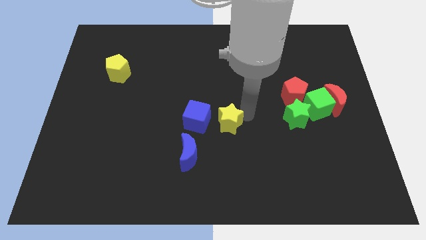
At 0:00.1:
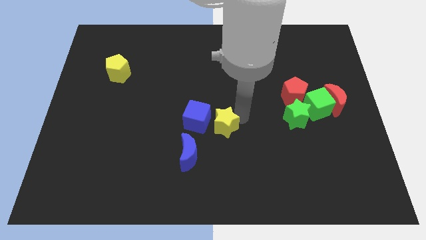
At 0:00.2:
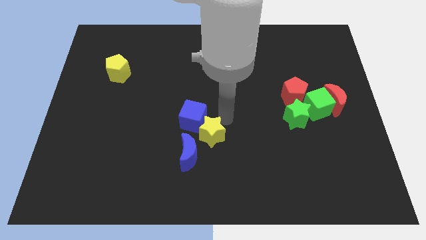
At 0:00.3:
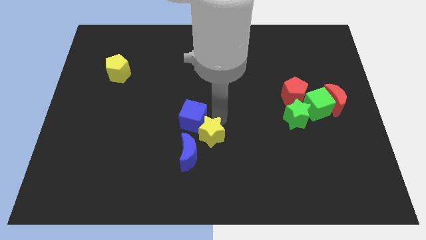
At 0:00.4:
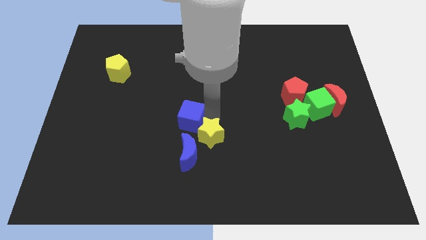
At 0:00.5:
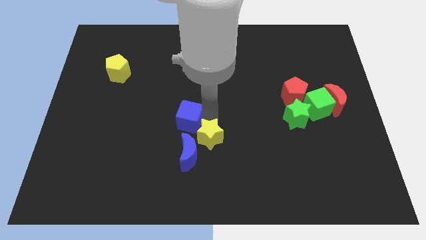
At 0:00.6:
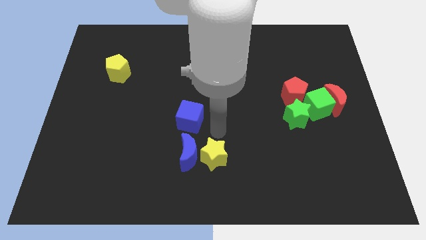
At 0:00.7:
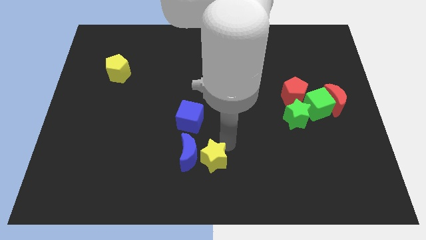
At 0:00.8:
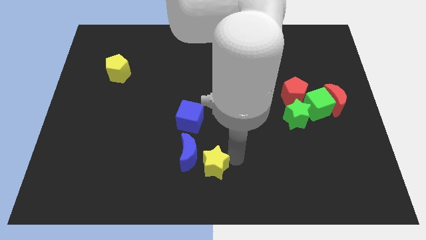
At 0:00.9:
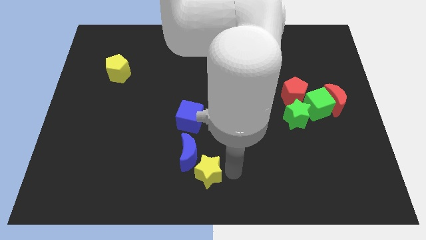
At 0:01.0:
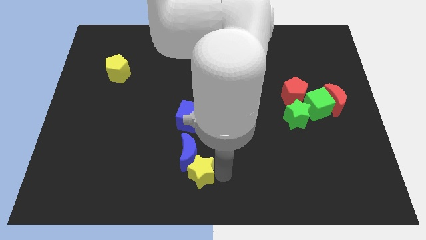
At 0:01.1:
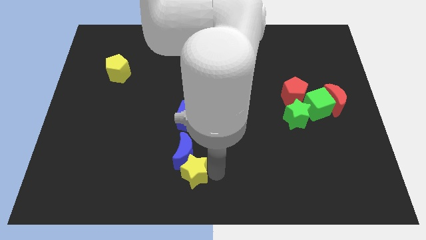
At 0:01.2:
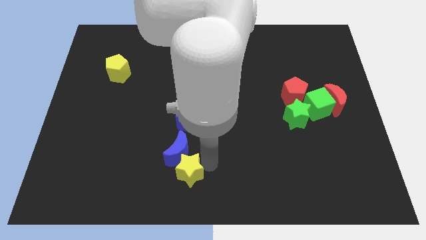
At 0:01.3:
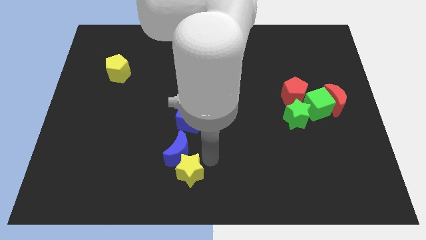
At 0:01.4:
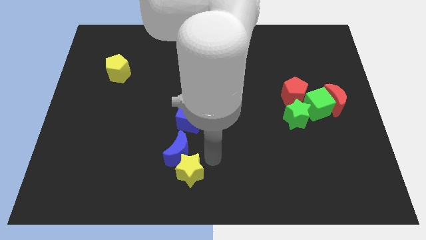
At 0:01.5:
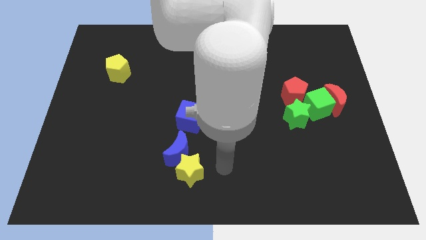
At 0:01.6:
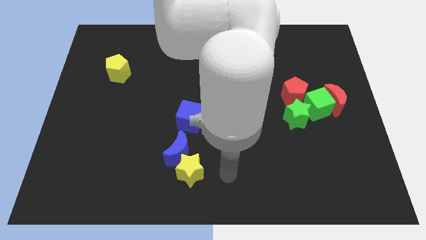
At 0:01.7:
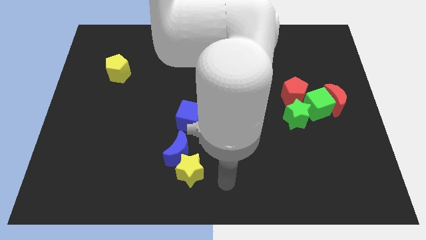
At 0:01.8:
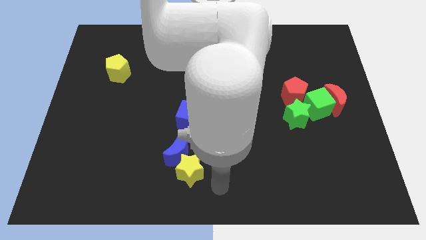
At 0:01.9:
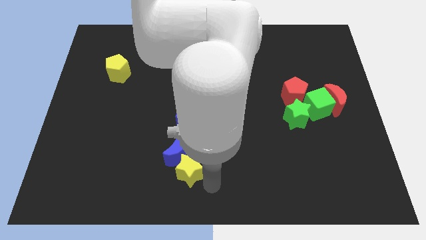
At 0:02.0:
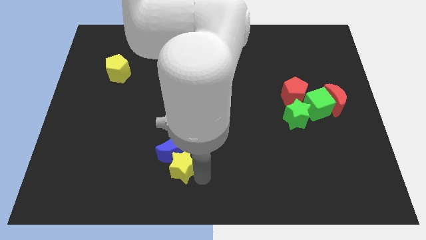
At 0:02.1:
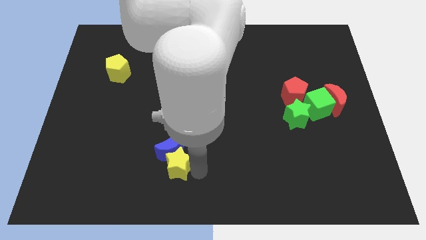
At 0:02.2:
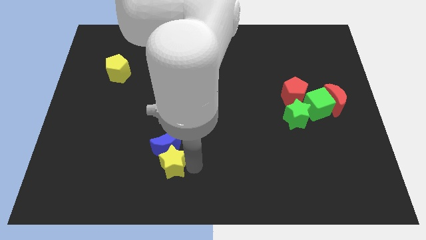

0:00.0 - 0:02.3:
place yellow star below blue crescent

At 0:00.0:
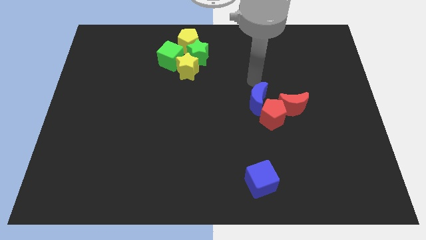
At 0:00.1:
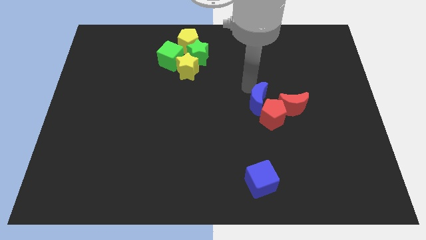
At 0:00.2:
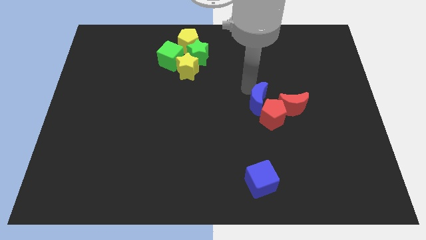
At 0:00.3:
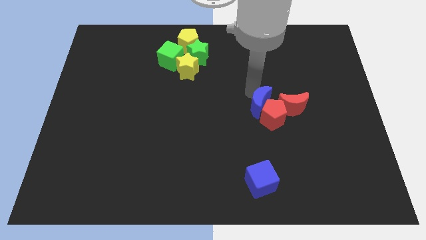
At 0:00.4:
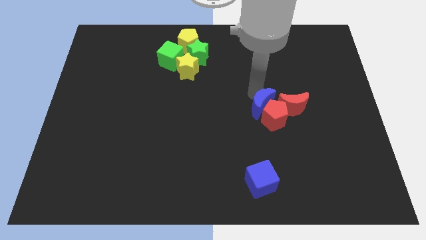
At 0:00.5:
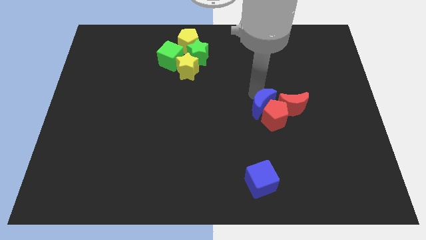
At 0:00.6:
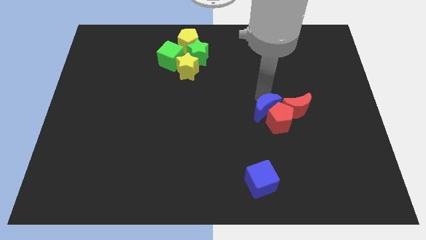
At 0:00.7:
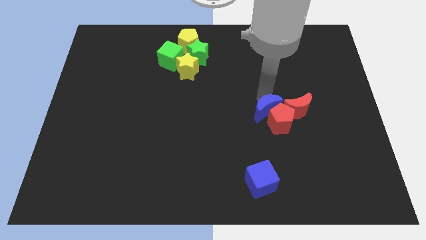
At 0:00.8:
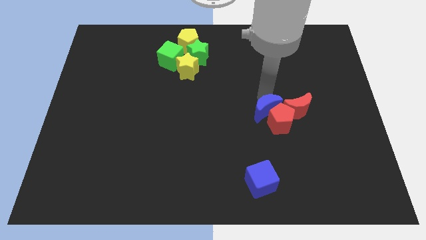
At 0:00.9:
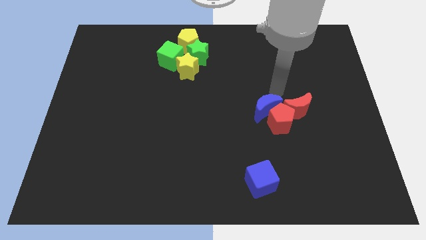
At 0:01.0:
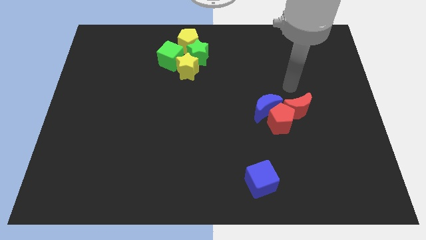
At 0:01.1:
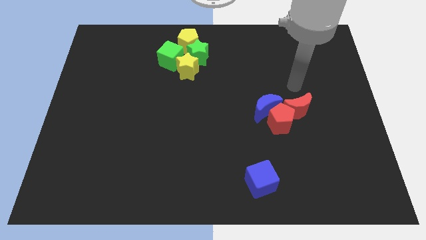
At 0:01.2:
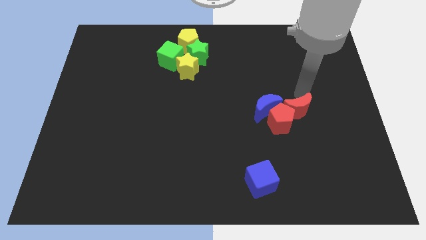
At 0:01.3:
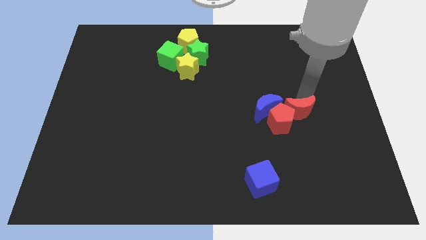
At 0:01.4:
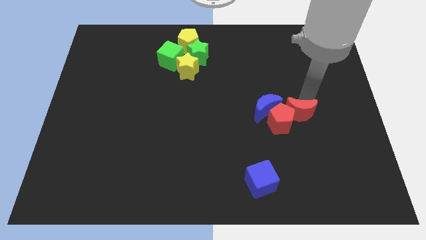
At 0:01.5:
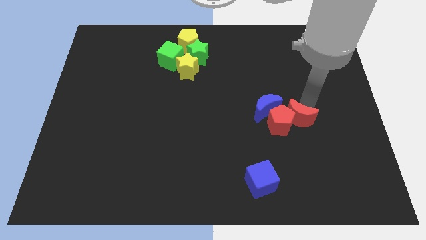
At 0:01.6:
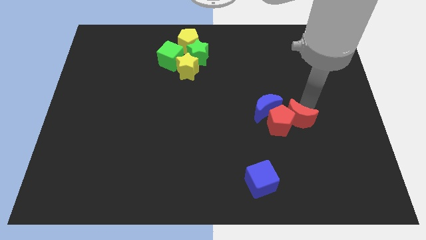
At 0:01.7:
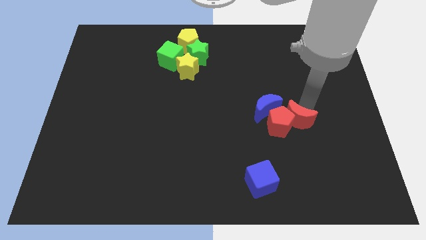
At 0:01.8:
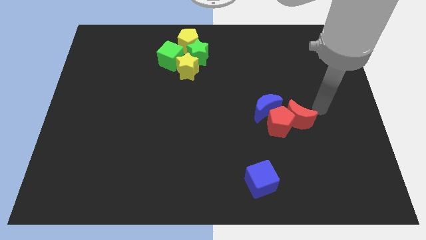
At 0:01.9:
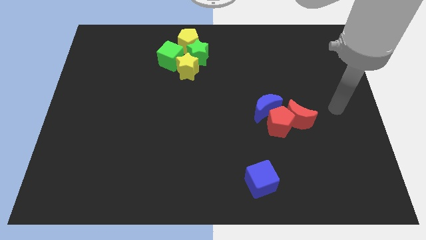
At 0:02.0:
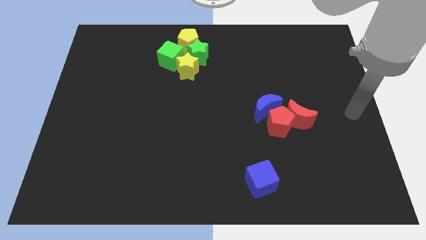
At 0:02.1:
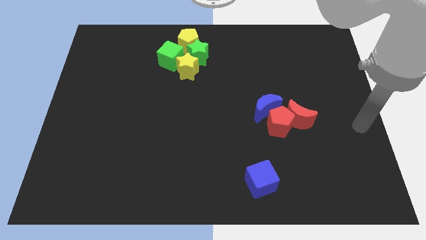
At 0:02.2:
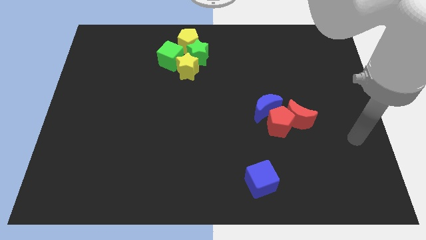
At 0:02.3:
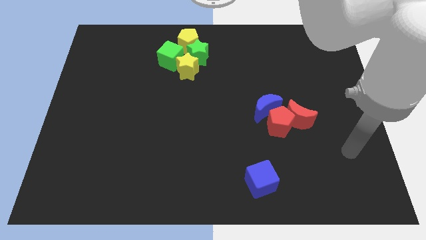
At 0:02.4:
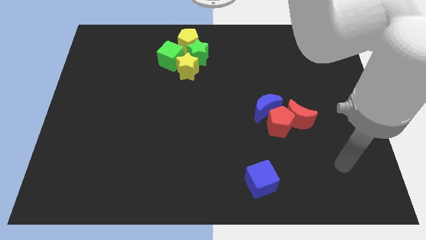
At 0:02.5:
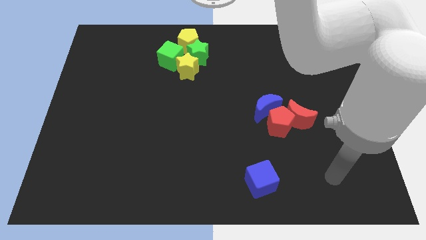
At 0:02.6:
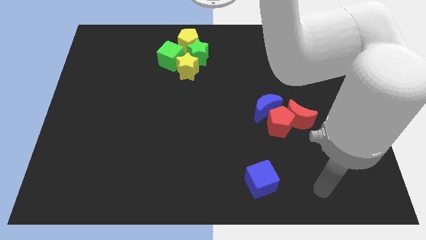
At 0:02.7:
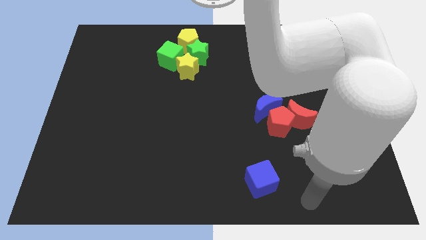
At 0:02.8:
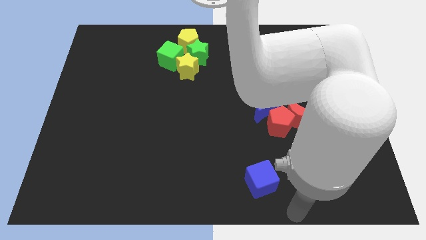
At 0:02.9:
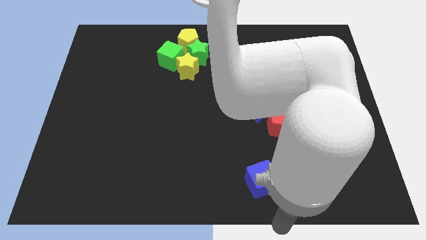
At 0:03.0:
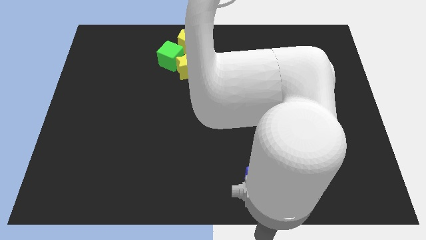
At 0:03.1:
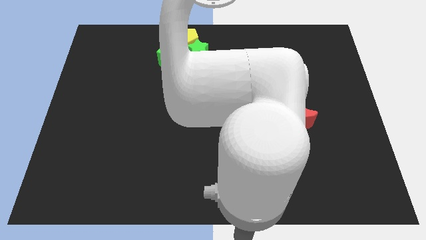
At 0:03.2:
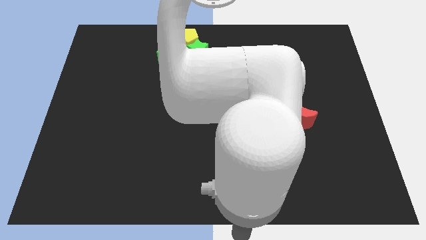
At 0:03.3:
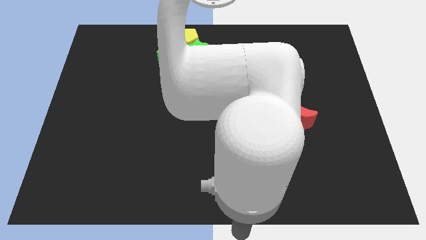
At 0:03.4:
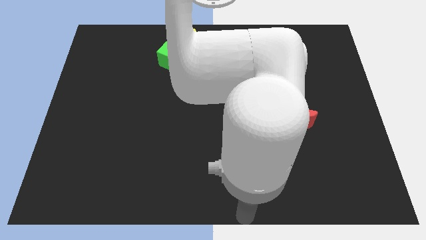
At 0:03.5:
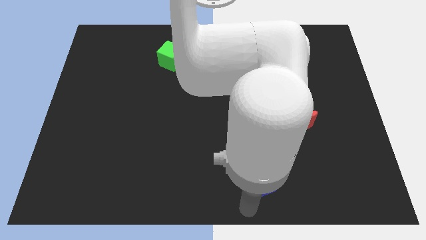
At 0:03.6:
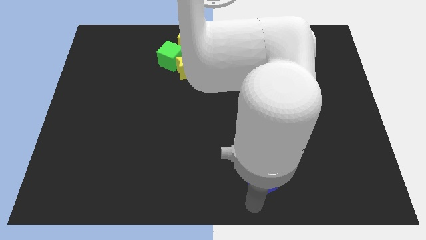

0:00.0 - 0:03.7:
place your arm below blue cube

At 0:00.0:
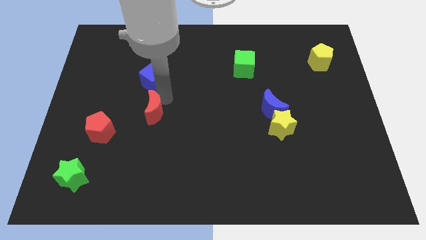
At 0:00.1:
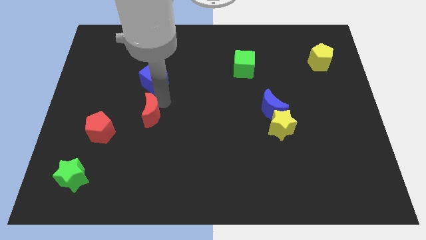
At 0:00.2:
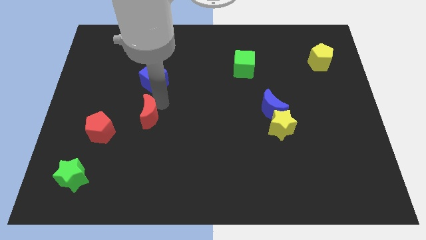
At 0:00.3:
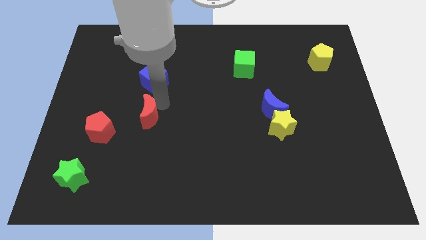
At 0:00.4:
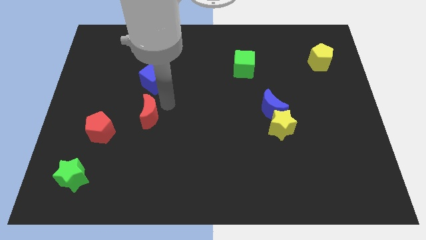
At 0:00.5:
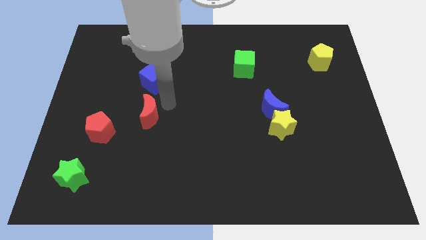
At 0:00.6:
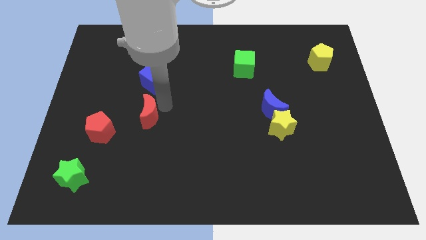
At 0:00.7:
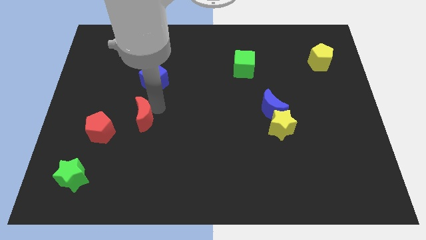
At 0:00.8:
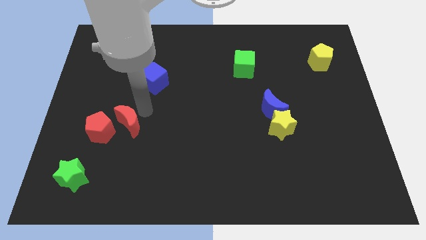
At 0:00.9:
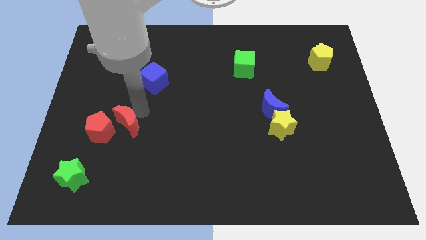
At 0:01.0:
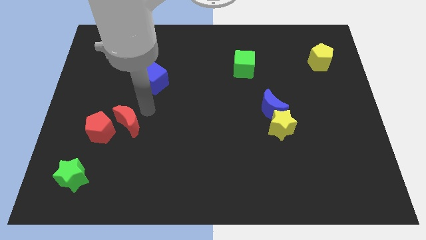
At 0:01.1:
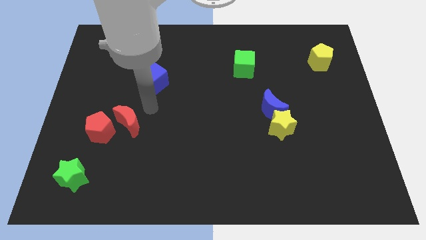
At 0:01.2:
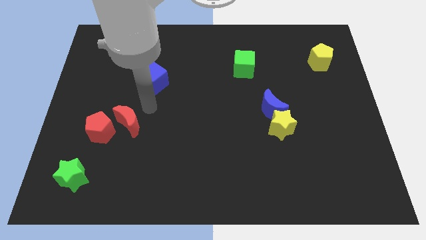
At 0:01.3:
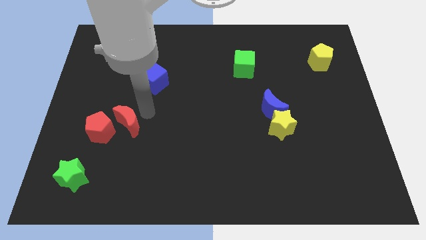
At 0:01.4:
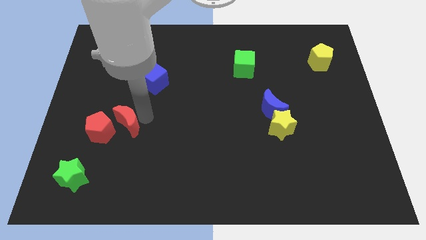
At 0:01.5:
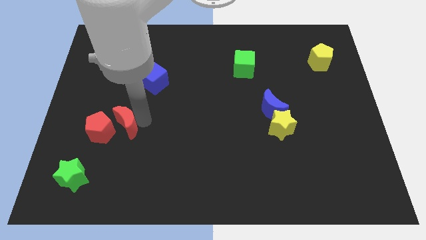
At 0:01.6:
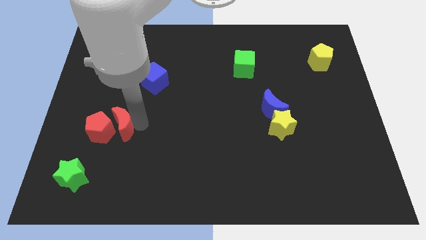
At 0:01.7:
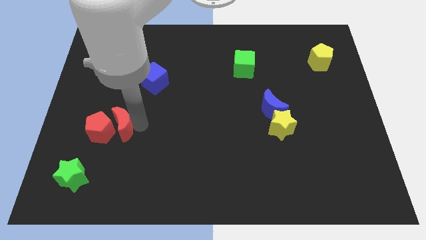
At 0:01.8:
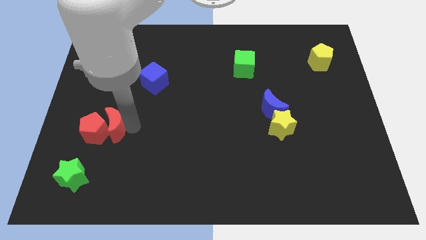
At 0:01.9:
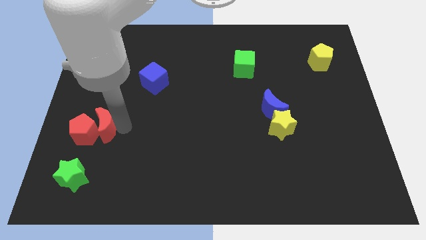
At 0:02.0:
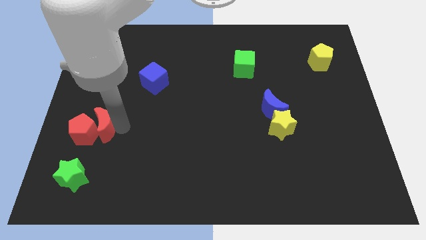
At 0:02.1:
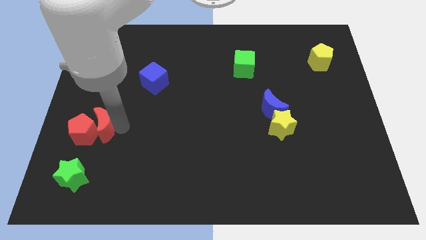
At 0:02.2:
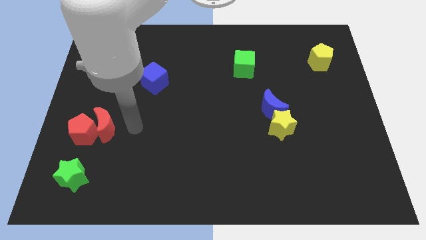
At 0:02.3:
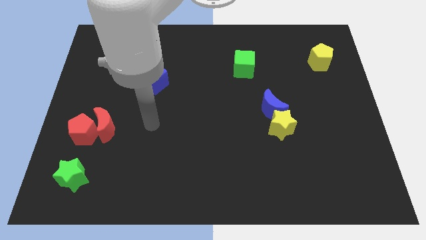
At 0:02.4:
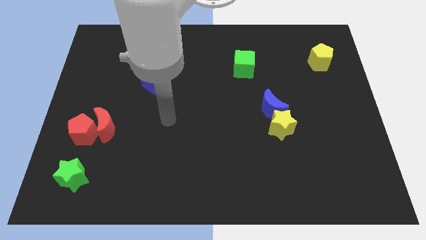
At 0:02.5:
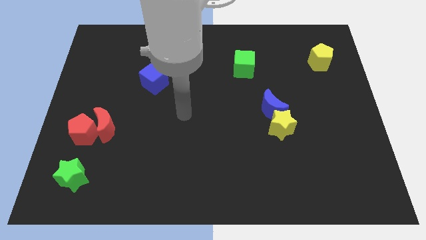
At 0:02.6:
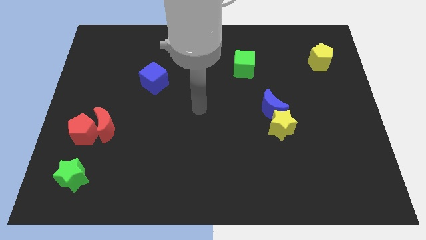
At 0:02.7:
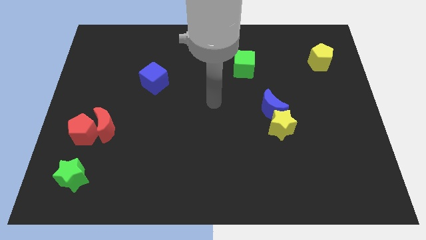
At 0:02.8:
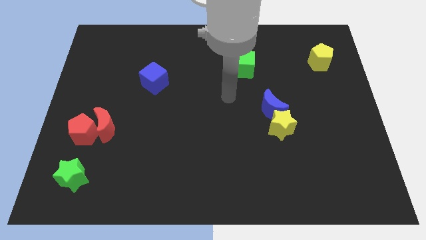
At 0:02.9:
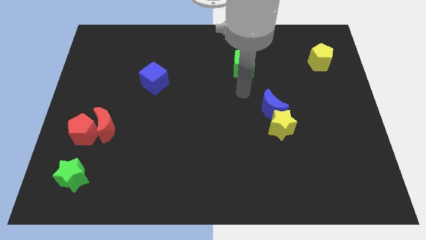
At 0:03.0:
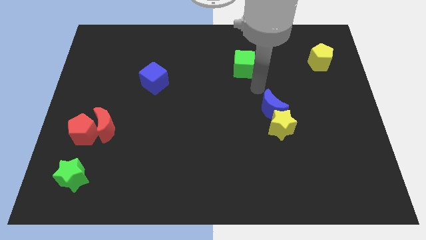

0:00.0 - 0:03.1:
push the red moon into the red pentagon
